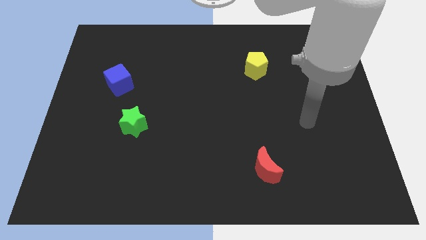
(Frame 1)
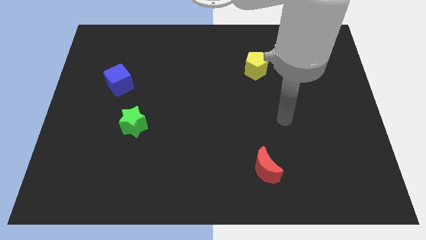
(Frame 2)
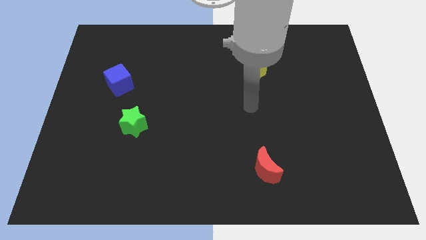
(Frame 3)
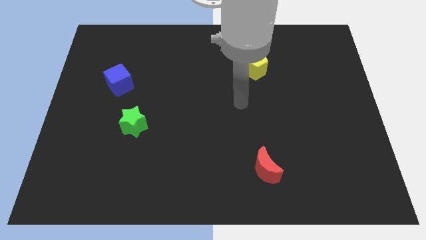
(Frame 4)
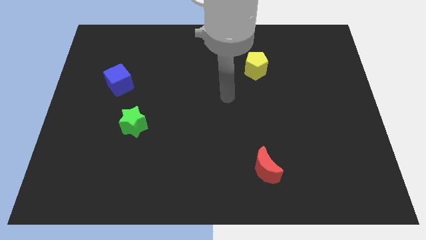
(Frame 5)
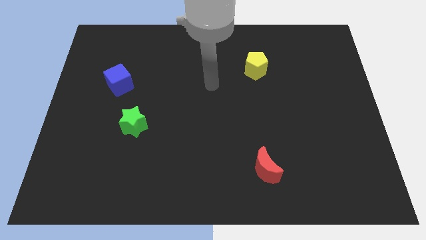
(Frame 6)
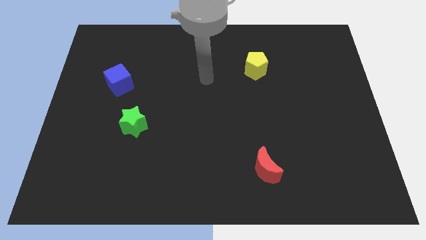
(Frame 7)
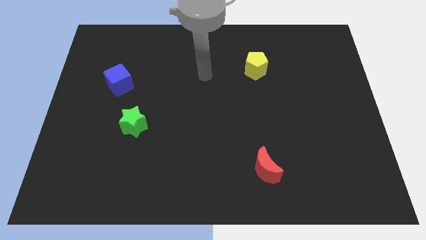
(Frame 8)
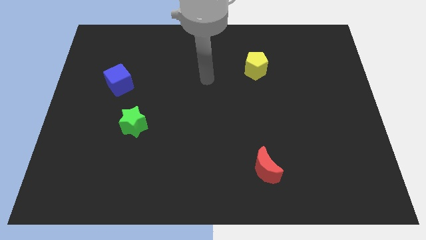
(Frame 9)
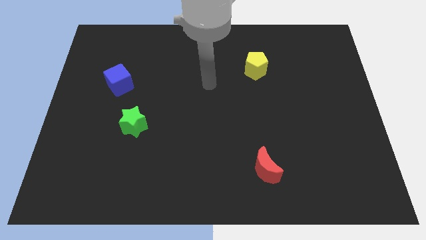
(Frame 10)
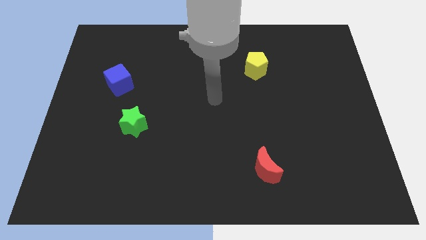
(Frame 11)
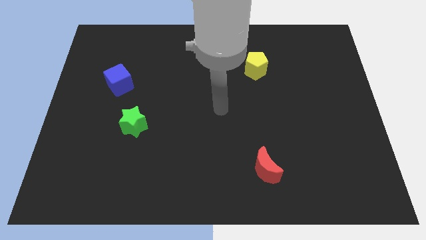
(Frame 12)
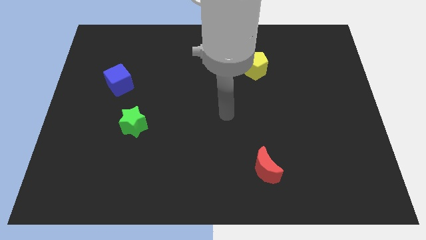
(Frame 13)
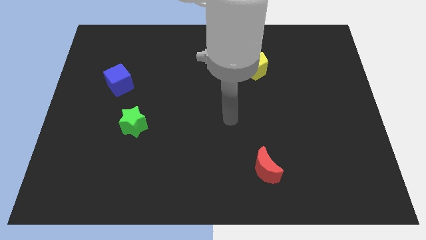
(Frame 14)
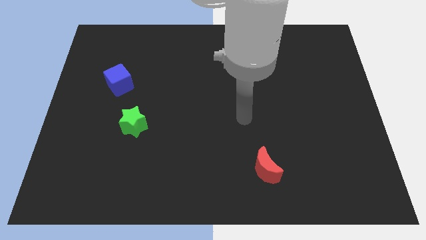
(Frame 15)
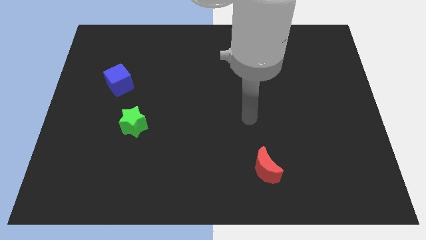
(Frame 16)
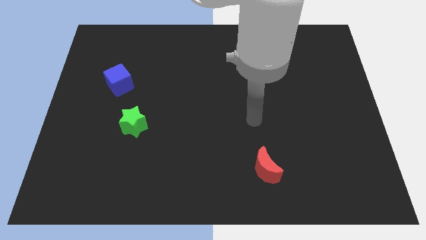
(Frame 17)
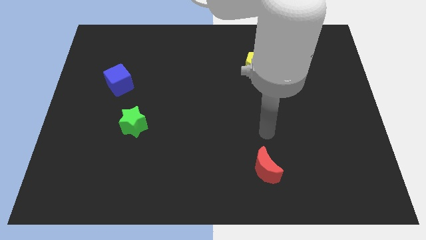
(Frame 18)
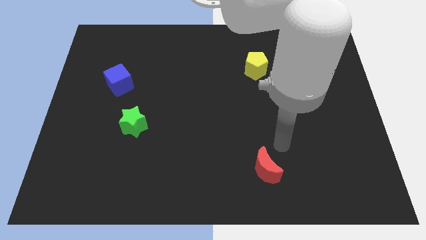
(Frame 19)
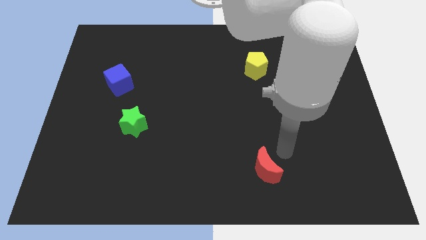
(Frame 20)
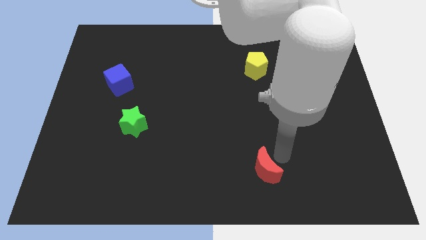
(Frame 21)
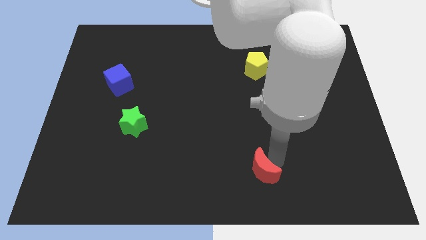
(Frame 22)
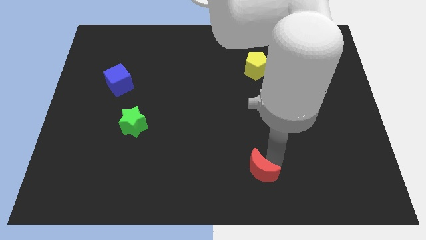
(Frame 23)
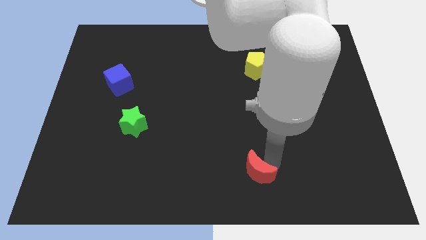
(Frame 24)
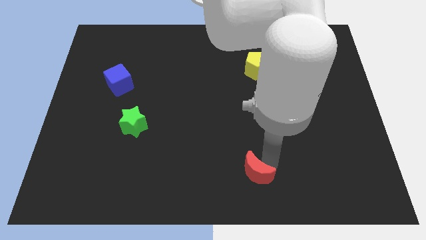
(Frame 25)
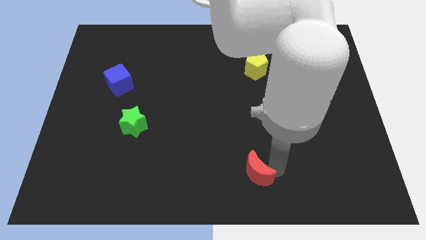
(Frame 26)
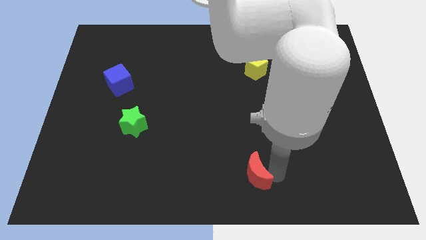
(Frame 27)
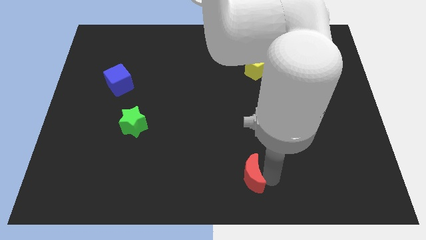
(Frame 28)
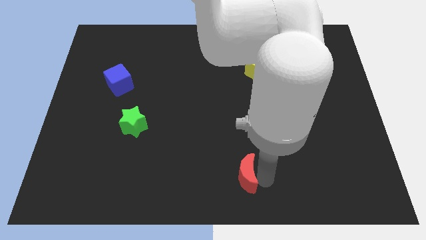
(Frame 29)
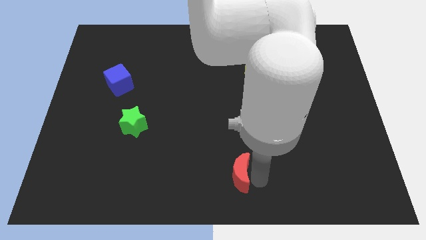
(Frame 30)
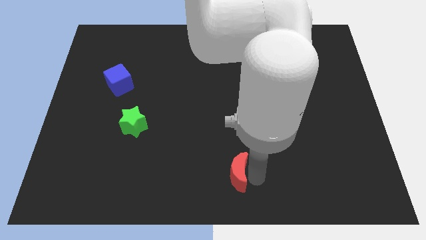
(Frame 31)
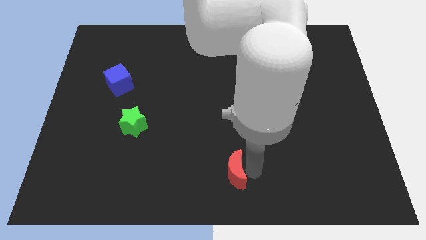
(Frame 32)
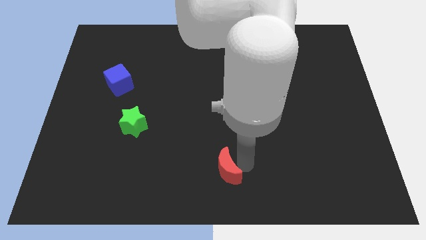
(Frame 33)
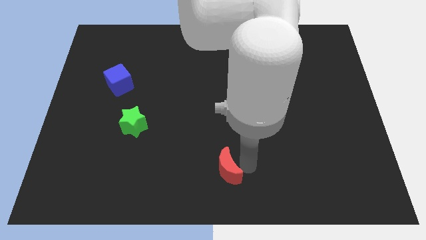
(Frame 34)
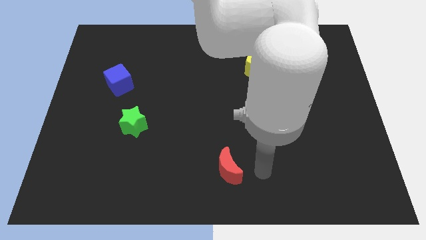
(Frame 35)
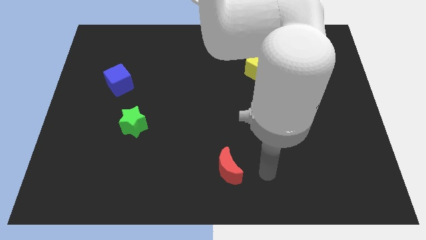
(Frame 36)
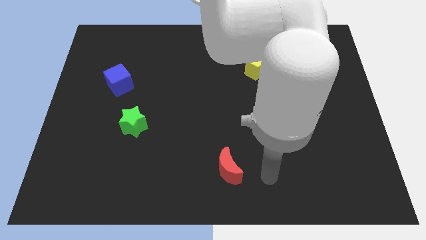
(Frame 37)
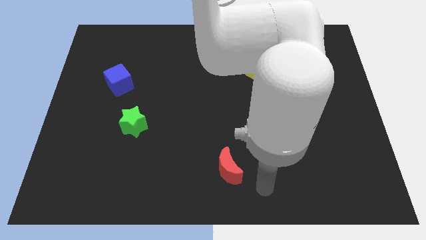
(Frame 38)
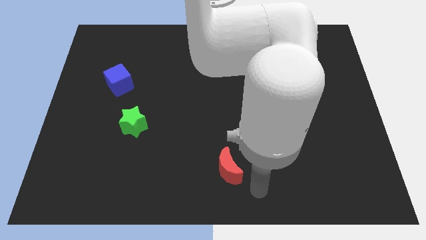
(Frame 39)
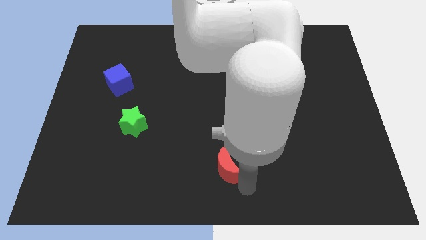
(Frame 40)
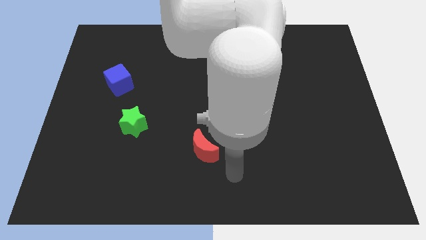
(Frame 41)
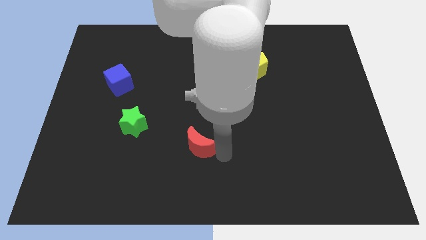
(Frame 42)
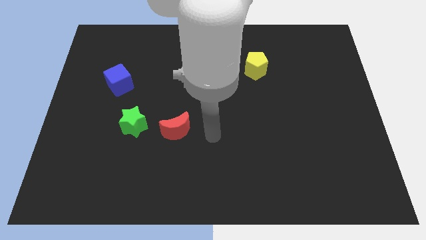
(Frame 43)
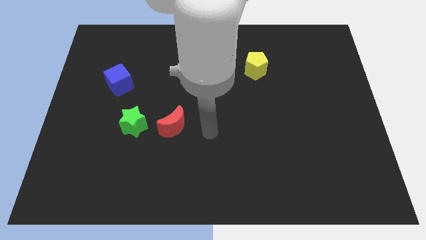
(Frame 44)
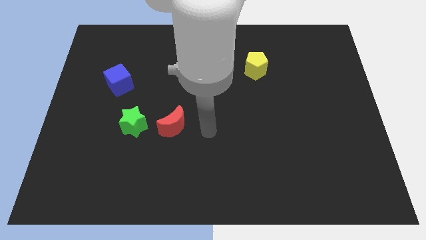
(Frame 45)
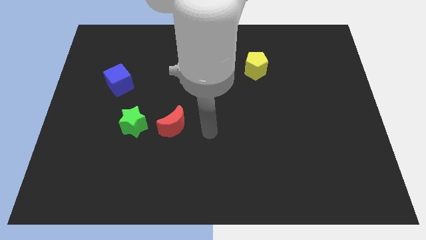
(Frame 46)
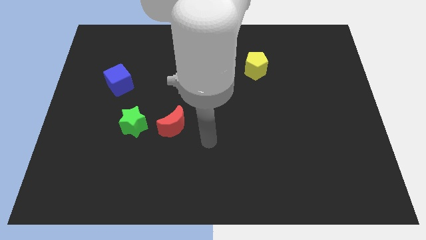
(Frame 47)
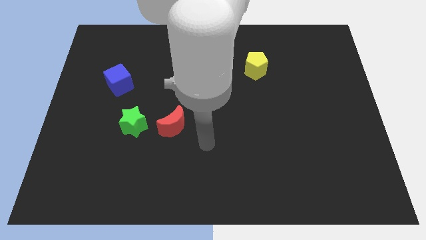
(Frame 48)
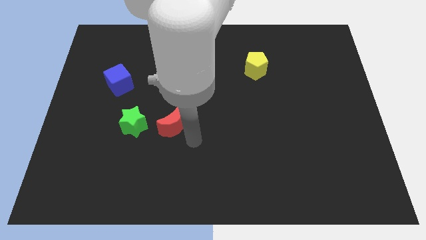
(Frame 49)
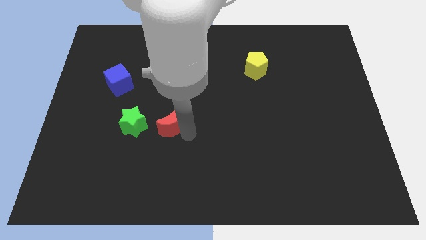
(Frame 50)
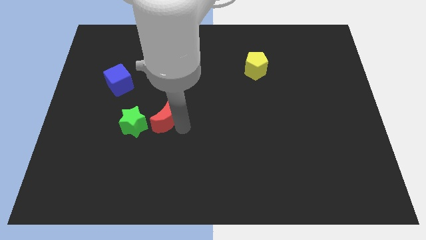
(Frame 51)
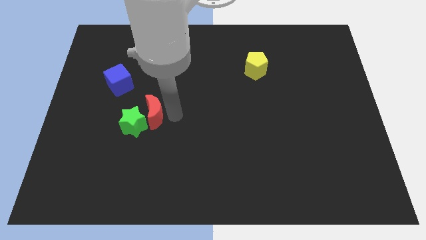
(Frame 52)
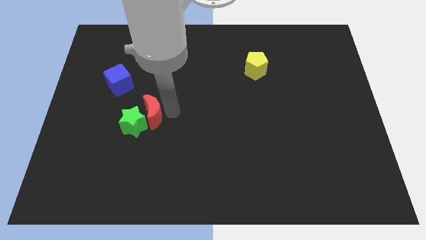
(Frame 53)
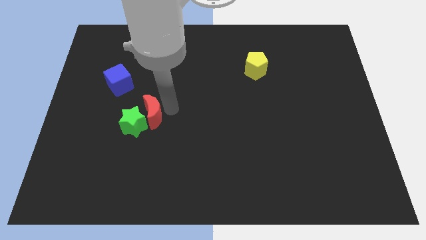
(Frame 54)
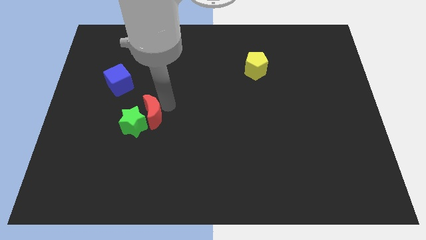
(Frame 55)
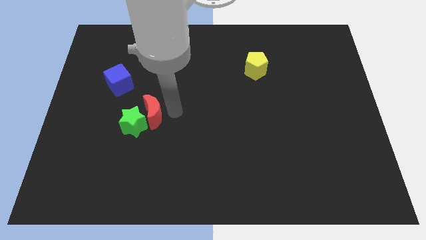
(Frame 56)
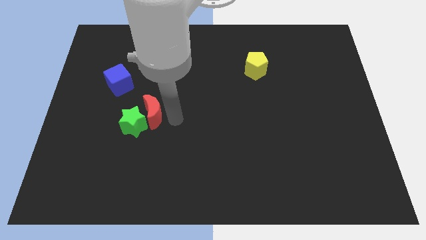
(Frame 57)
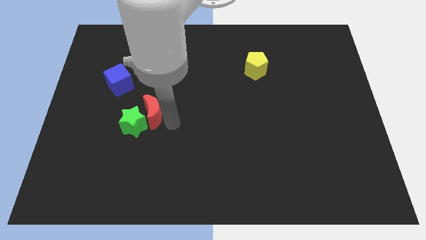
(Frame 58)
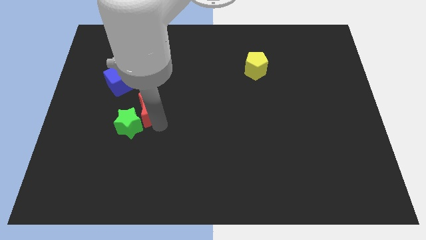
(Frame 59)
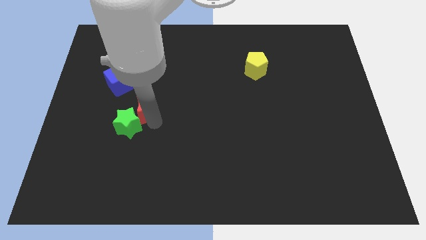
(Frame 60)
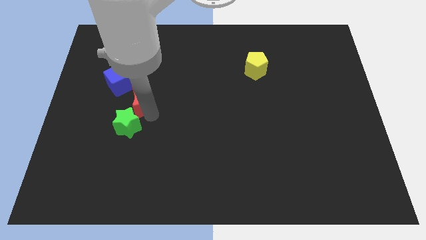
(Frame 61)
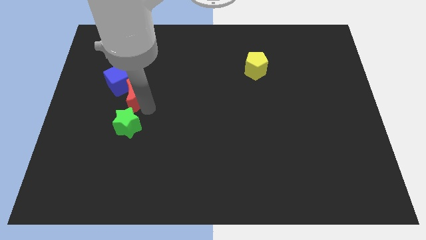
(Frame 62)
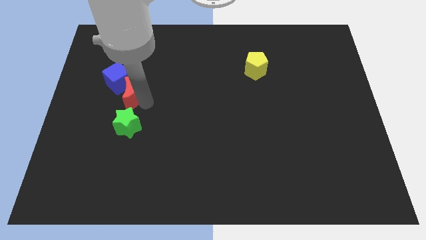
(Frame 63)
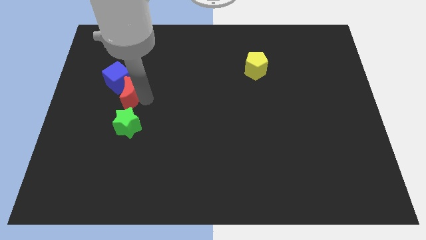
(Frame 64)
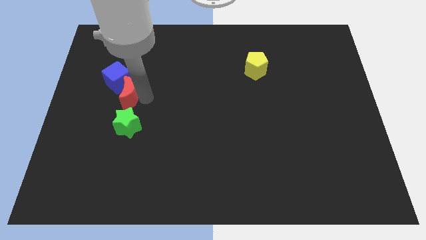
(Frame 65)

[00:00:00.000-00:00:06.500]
move the red block close to the blue cube

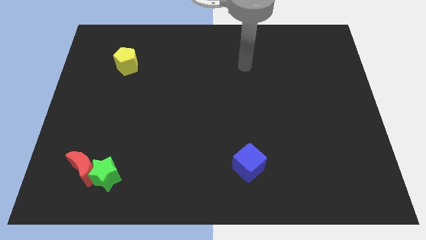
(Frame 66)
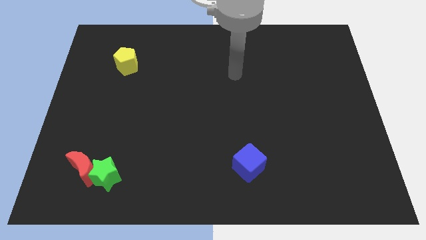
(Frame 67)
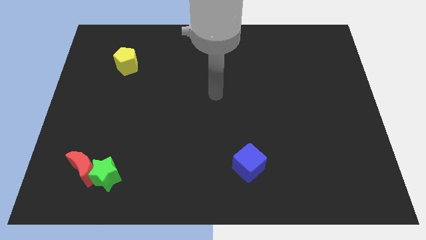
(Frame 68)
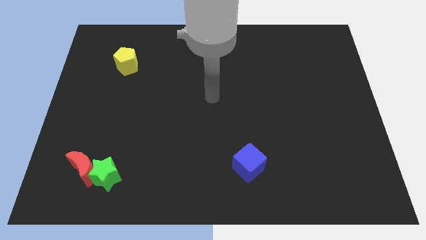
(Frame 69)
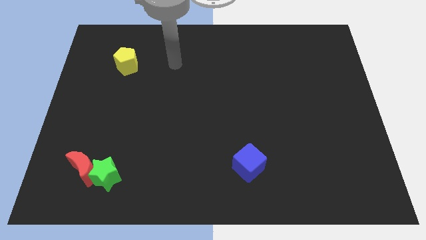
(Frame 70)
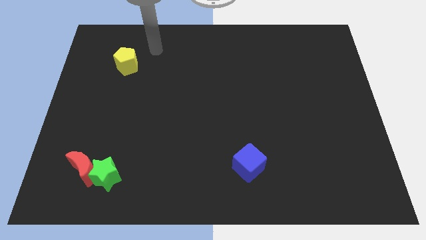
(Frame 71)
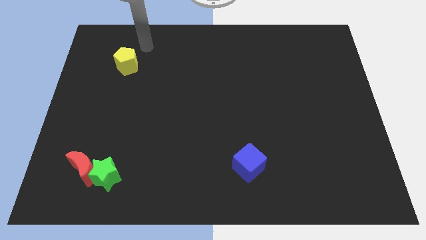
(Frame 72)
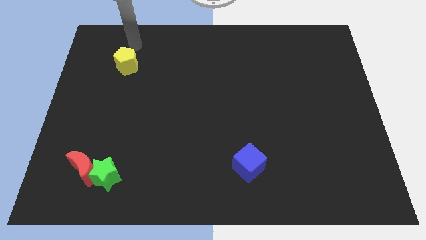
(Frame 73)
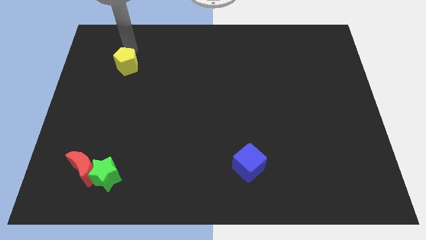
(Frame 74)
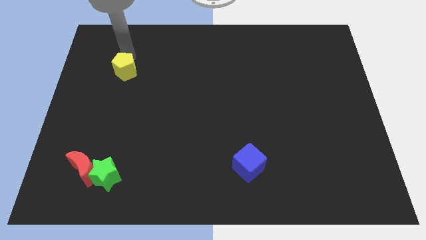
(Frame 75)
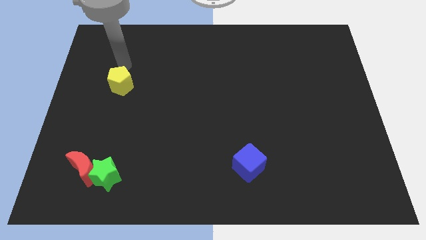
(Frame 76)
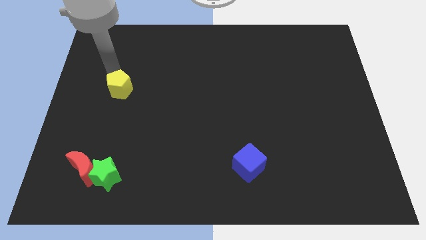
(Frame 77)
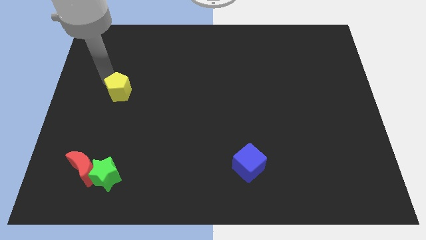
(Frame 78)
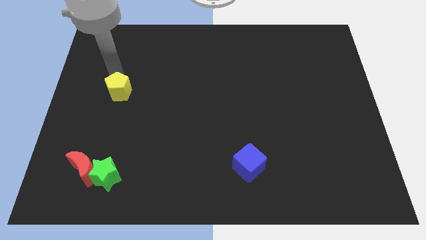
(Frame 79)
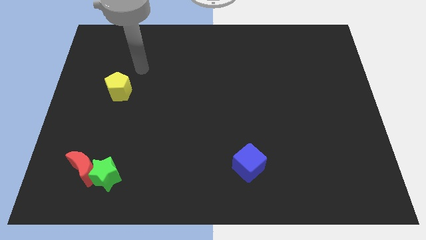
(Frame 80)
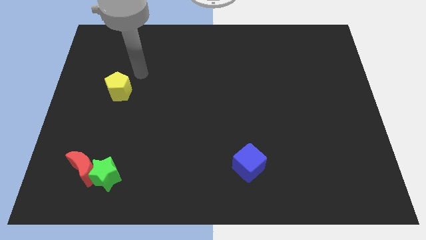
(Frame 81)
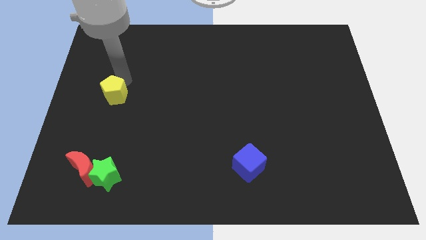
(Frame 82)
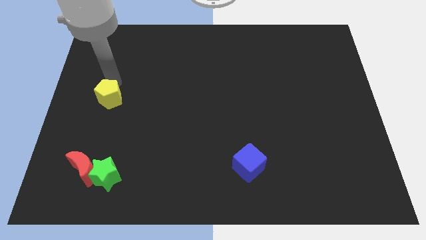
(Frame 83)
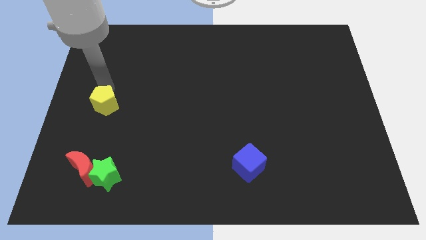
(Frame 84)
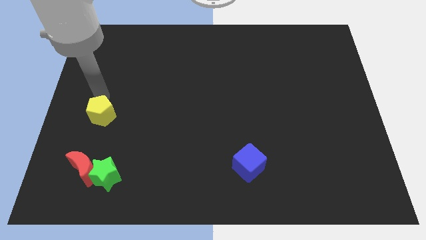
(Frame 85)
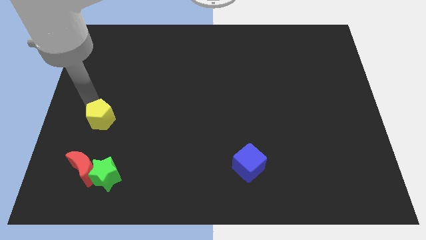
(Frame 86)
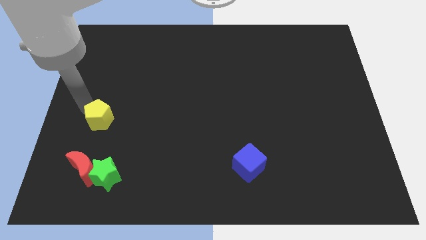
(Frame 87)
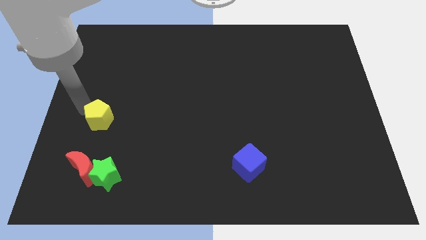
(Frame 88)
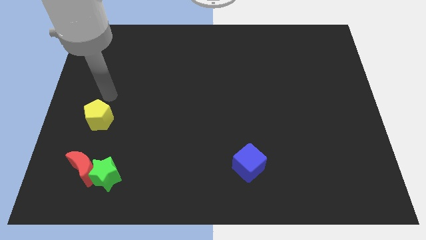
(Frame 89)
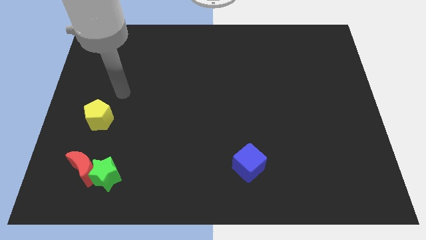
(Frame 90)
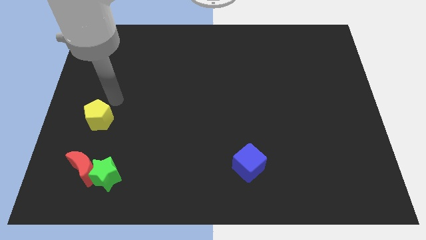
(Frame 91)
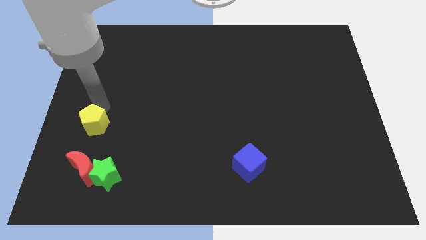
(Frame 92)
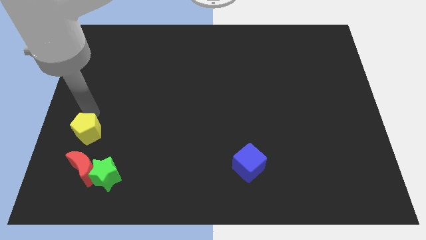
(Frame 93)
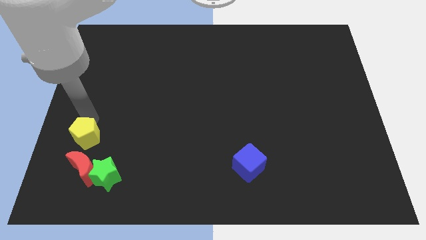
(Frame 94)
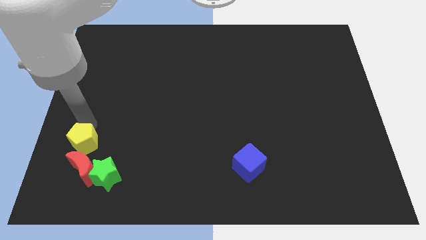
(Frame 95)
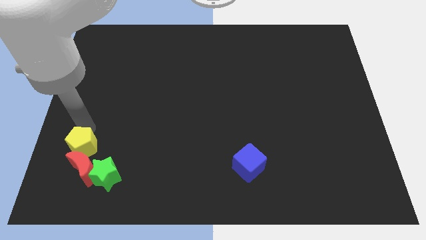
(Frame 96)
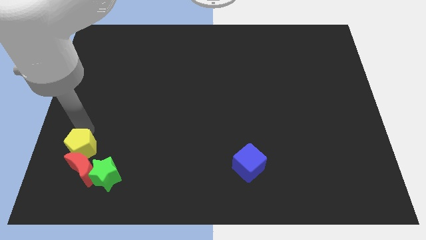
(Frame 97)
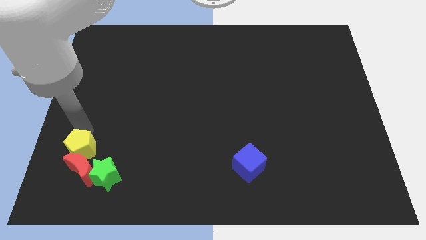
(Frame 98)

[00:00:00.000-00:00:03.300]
push the yellow block to the red moon
